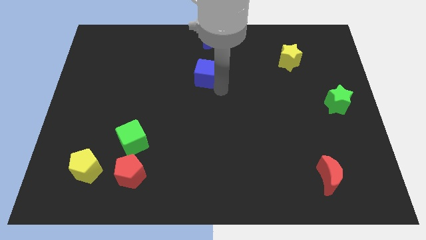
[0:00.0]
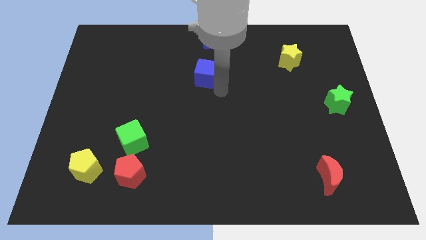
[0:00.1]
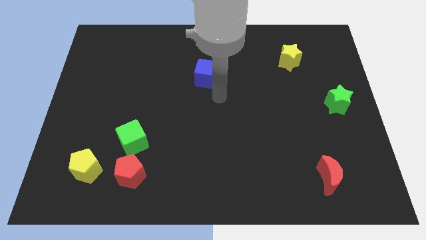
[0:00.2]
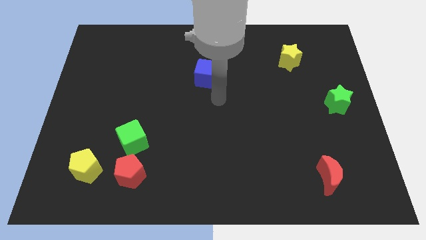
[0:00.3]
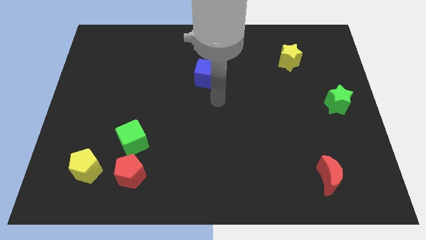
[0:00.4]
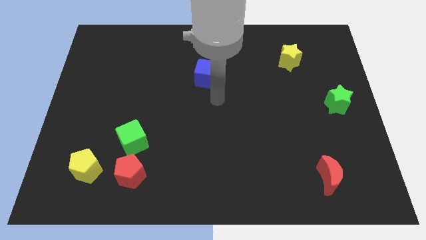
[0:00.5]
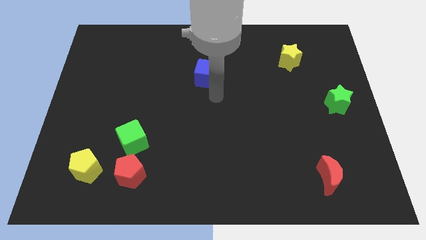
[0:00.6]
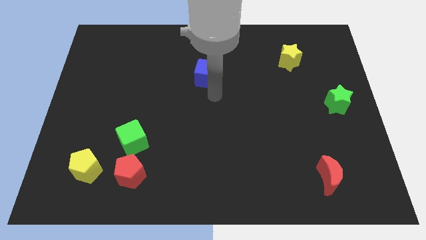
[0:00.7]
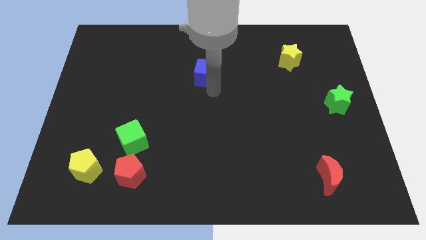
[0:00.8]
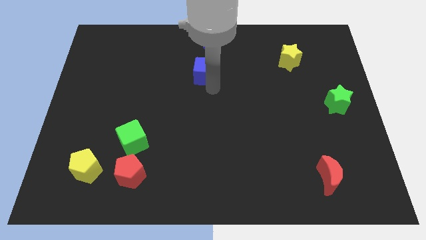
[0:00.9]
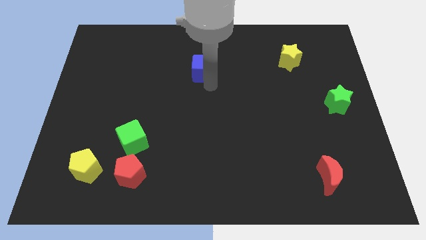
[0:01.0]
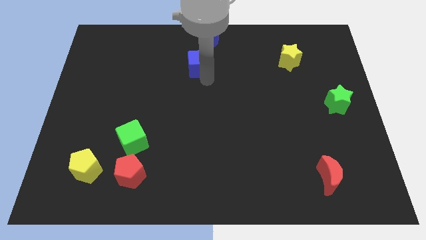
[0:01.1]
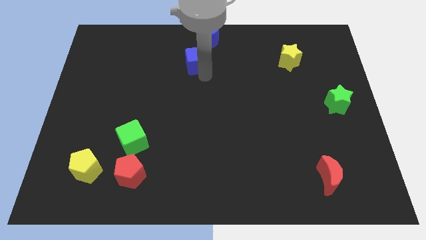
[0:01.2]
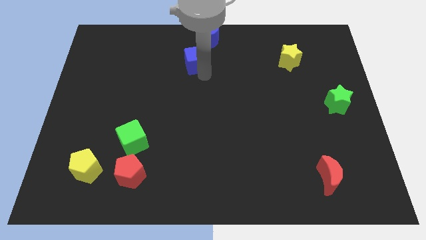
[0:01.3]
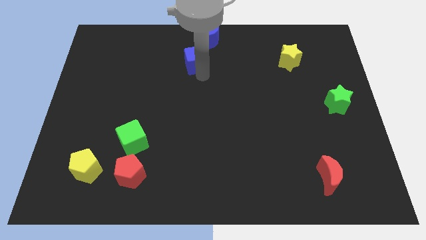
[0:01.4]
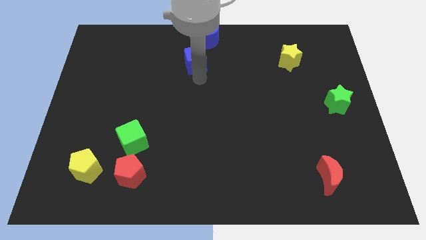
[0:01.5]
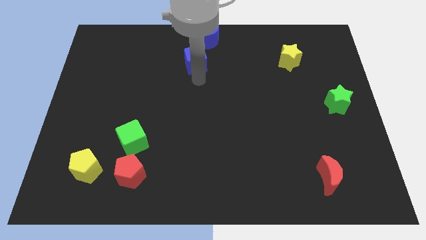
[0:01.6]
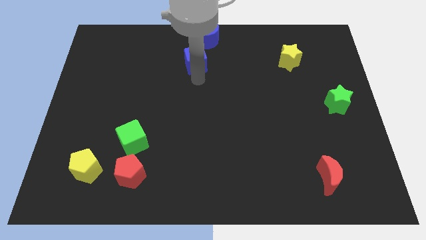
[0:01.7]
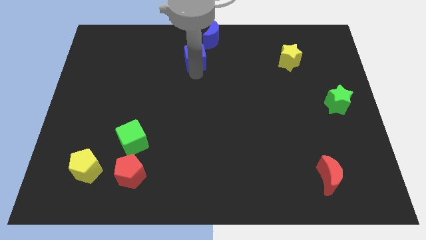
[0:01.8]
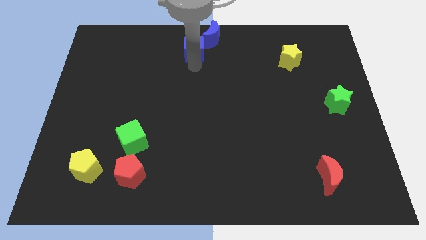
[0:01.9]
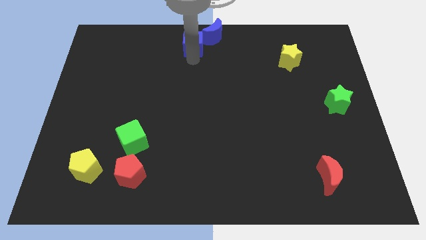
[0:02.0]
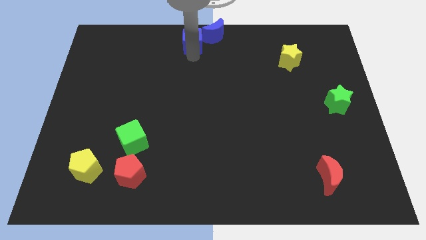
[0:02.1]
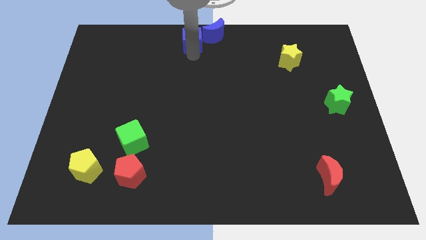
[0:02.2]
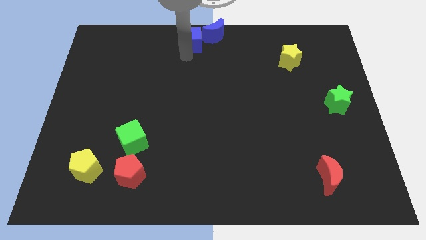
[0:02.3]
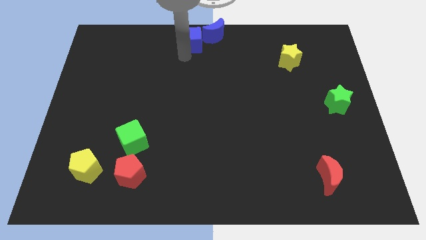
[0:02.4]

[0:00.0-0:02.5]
place blue cube below blue crescent

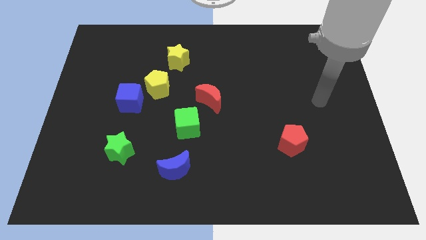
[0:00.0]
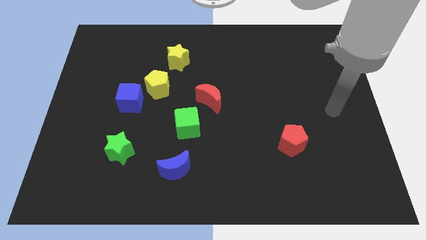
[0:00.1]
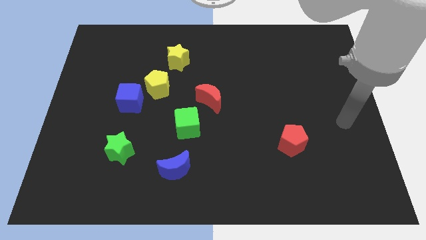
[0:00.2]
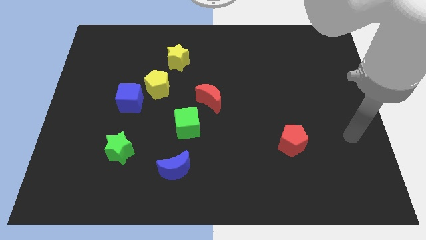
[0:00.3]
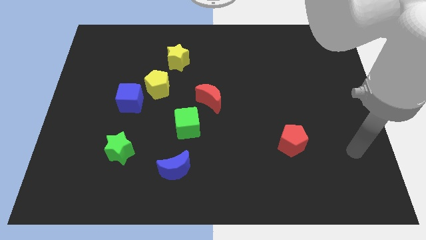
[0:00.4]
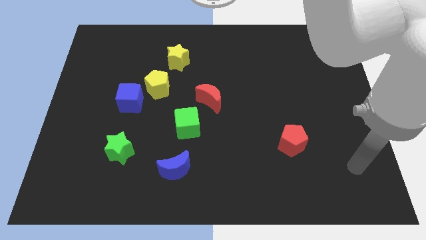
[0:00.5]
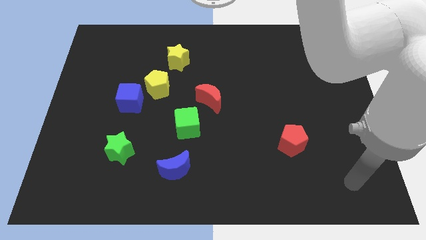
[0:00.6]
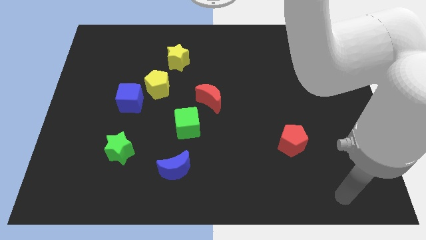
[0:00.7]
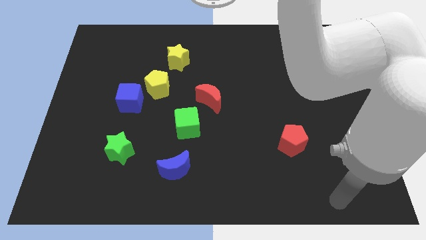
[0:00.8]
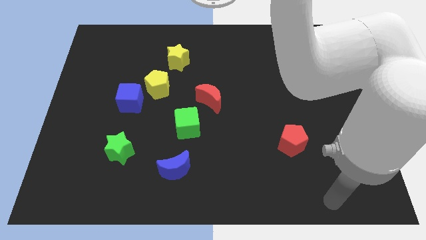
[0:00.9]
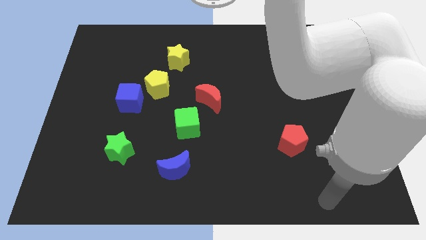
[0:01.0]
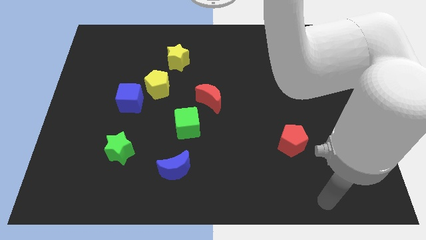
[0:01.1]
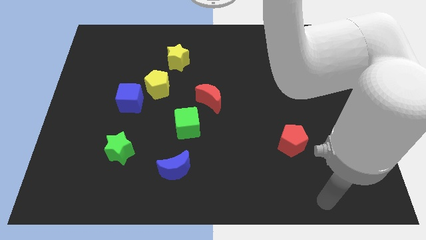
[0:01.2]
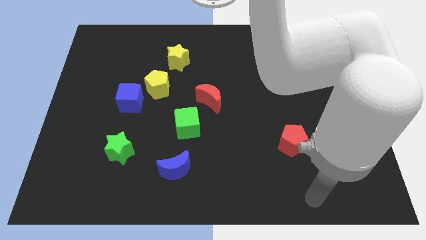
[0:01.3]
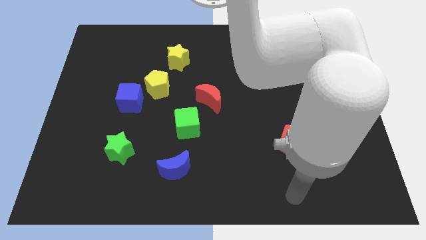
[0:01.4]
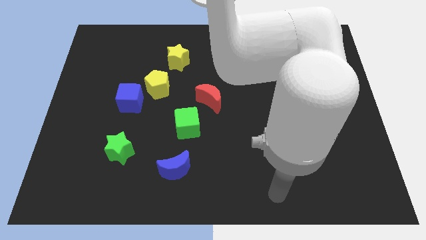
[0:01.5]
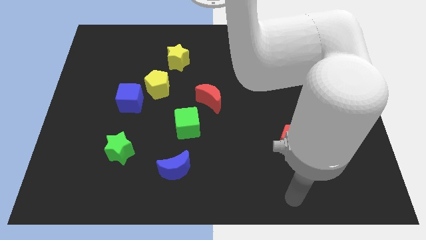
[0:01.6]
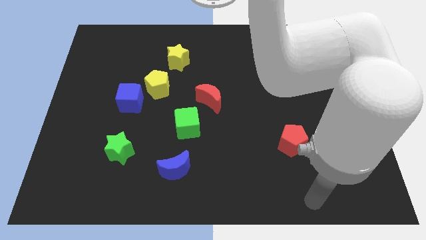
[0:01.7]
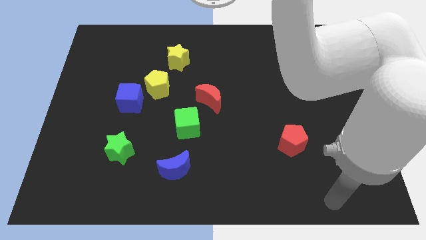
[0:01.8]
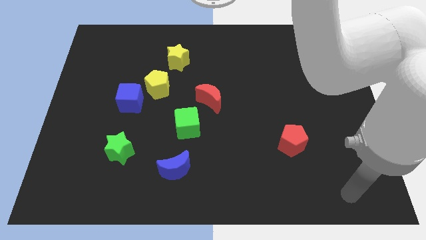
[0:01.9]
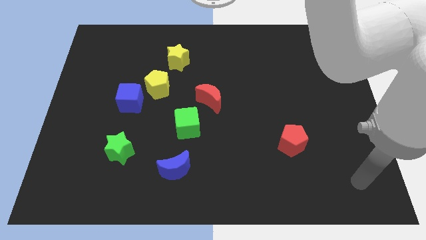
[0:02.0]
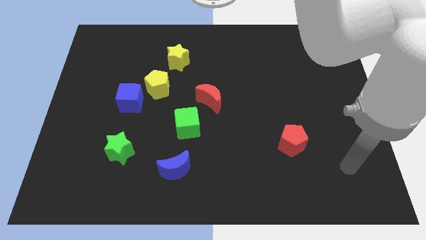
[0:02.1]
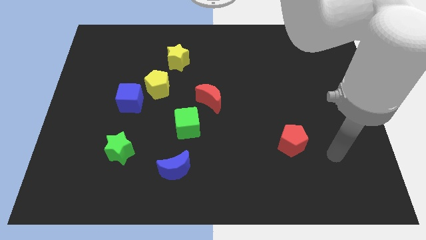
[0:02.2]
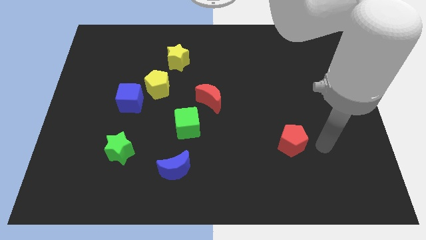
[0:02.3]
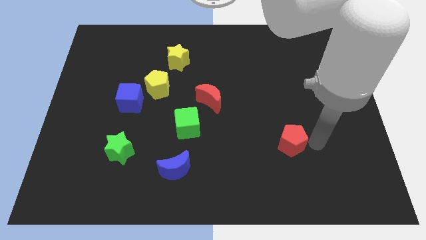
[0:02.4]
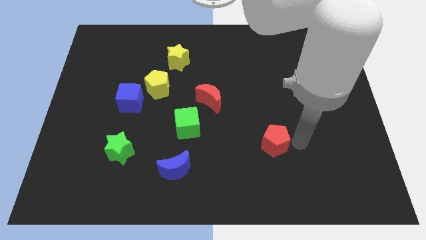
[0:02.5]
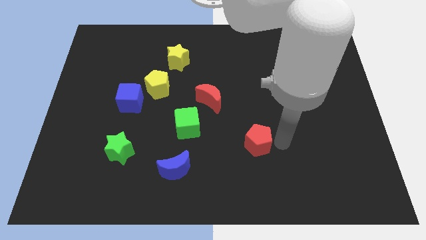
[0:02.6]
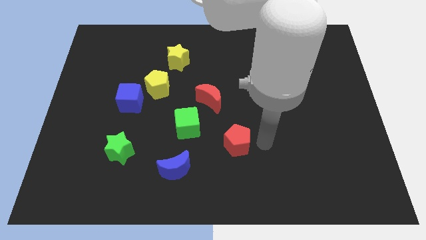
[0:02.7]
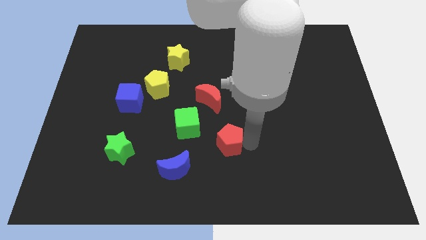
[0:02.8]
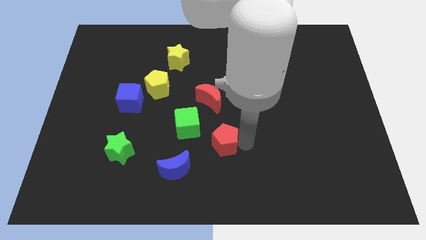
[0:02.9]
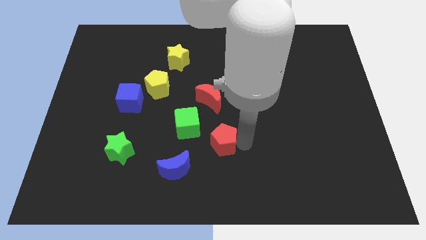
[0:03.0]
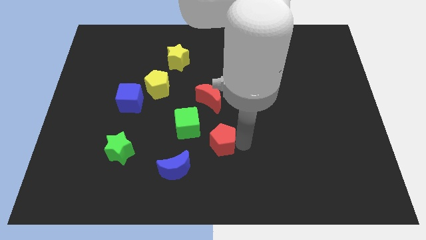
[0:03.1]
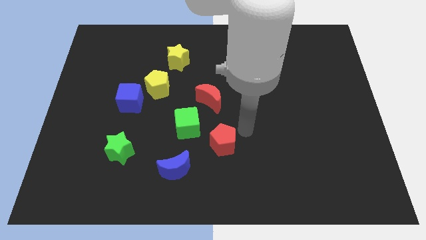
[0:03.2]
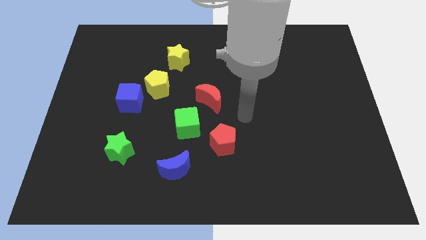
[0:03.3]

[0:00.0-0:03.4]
place the red pentagon close to the green cube

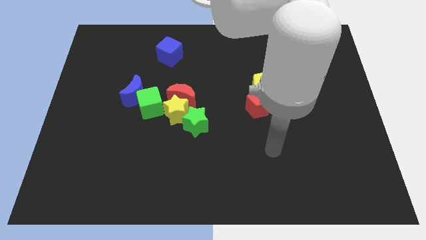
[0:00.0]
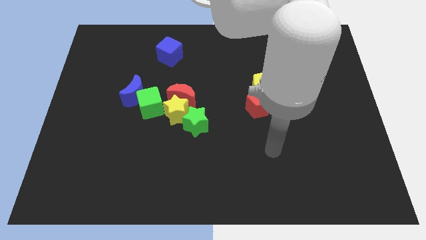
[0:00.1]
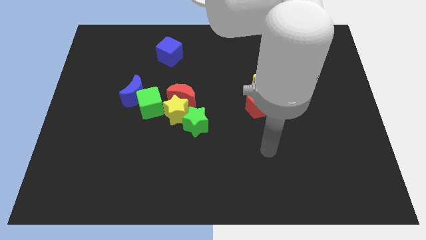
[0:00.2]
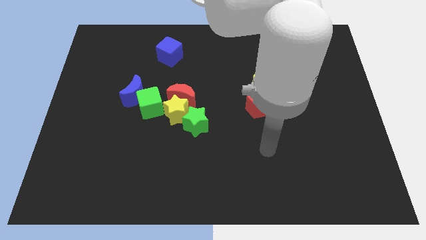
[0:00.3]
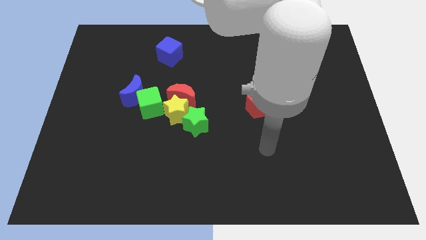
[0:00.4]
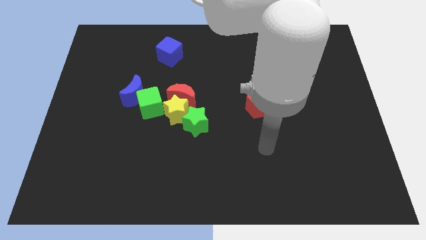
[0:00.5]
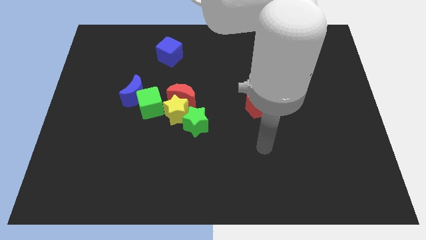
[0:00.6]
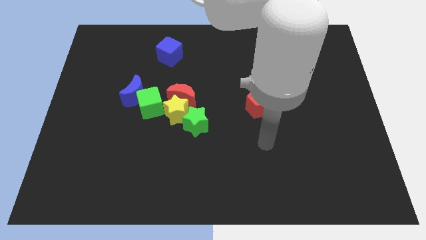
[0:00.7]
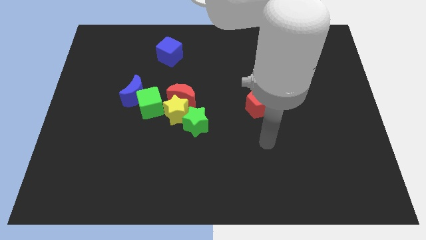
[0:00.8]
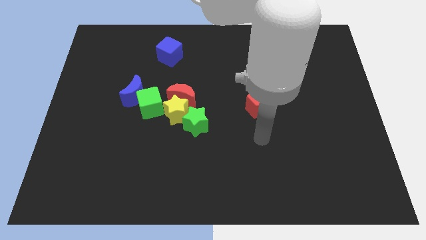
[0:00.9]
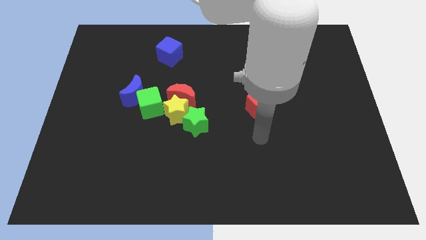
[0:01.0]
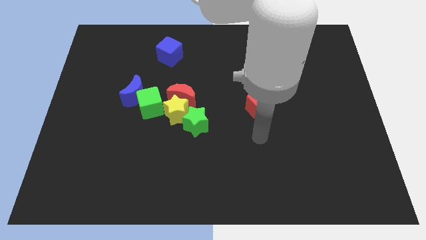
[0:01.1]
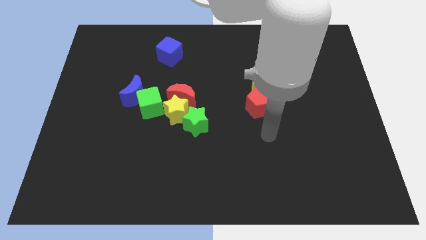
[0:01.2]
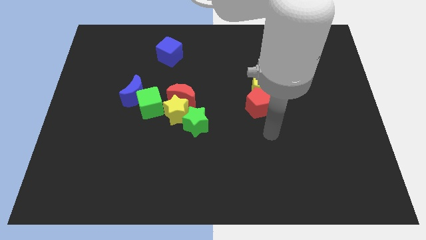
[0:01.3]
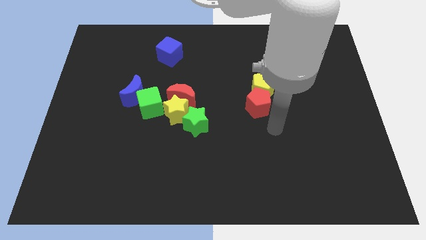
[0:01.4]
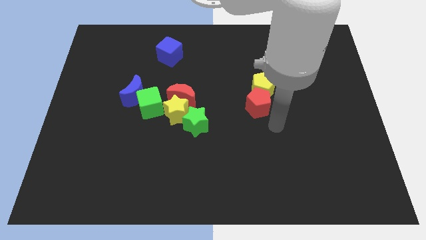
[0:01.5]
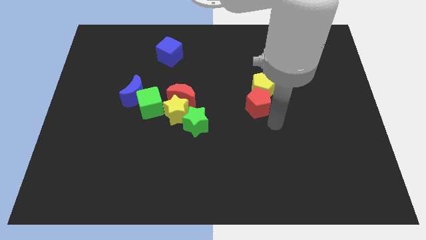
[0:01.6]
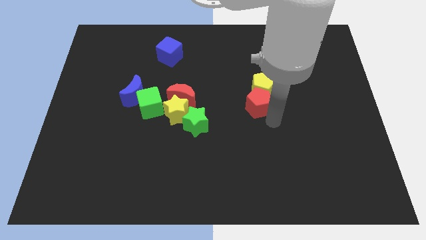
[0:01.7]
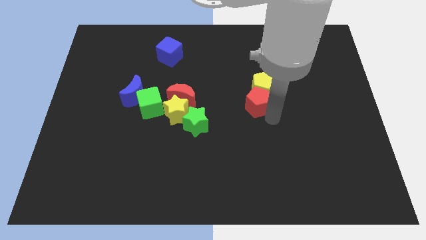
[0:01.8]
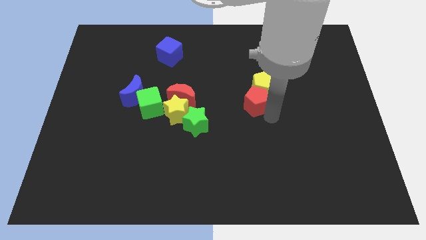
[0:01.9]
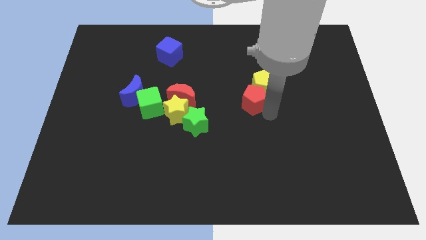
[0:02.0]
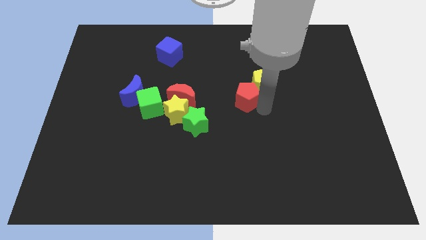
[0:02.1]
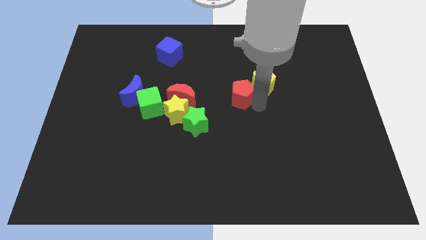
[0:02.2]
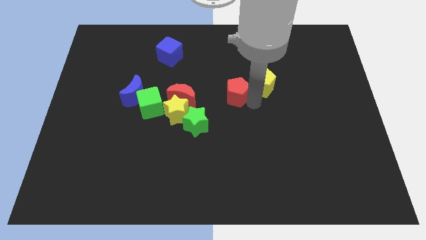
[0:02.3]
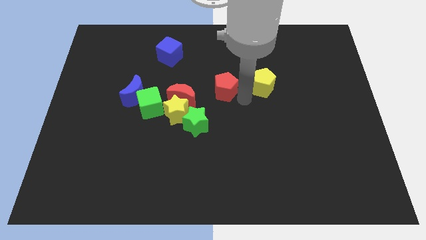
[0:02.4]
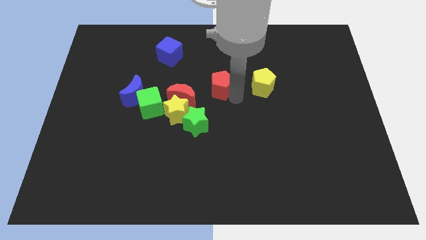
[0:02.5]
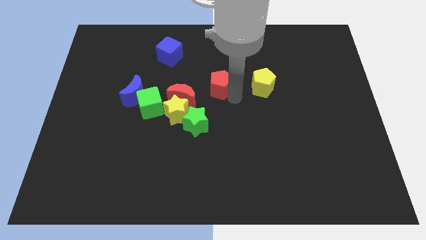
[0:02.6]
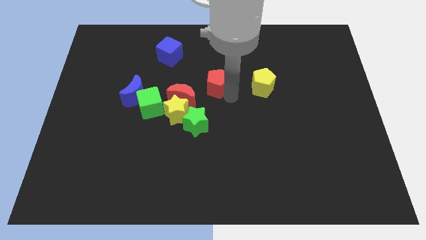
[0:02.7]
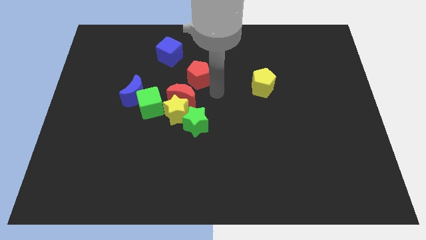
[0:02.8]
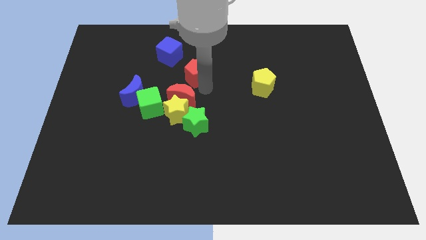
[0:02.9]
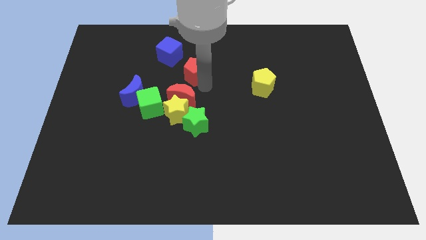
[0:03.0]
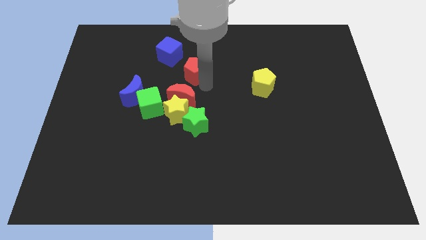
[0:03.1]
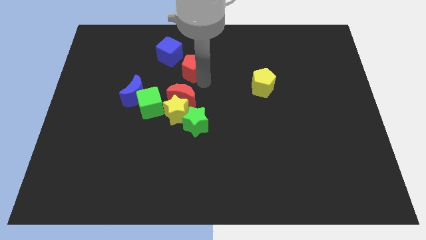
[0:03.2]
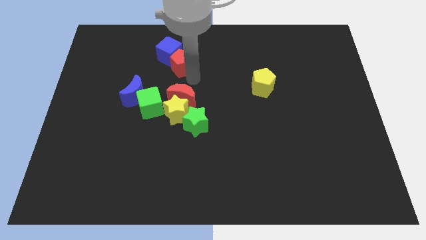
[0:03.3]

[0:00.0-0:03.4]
push the red pentagon to the top side of the red moon
